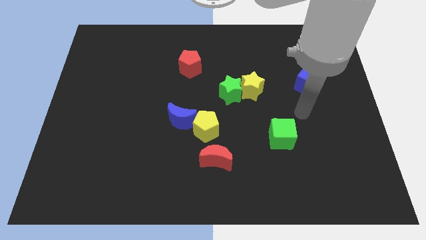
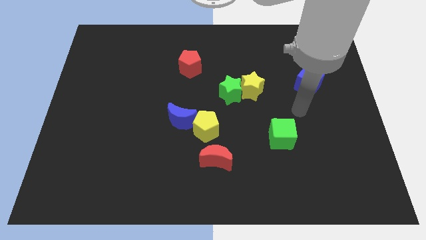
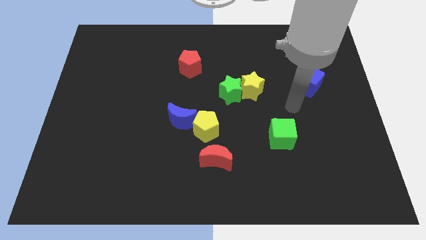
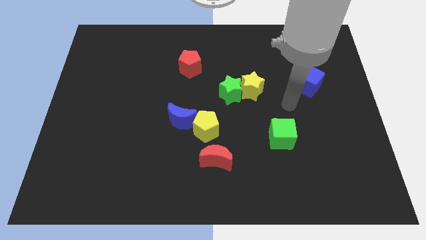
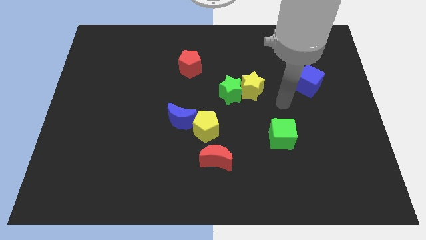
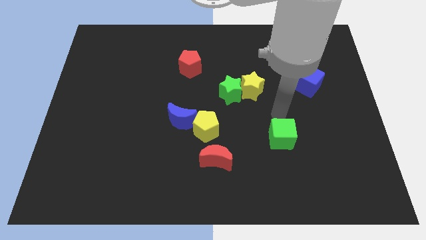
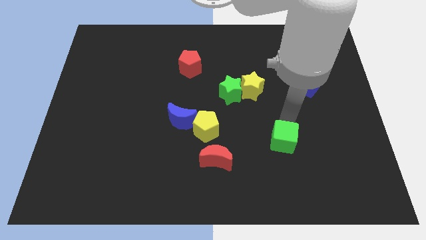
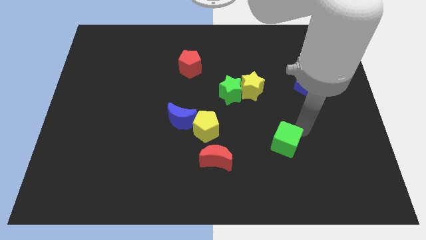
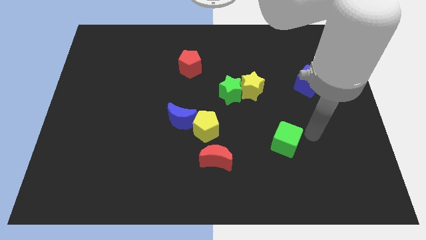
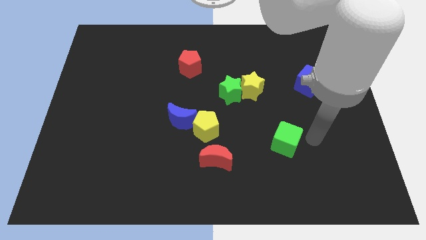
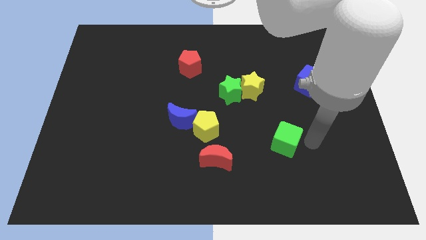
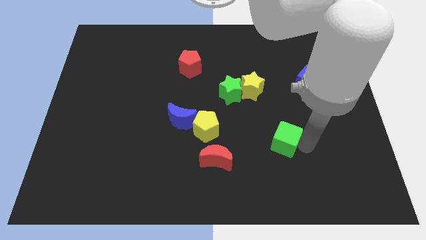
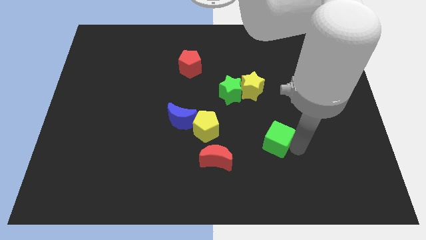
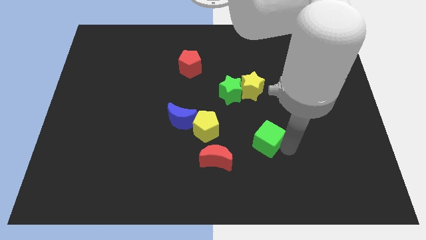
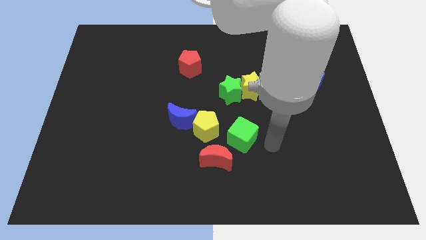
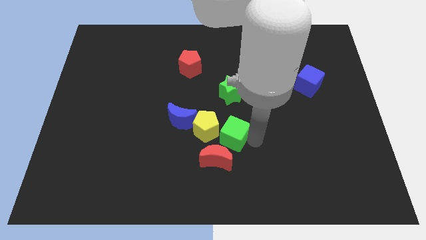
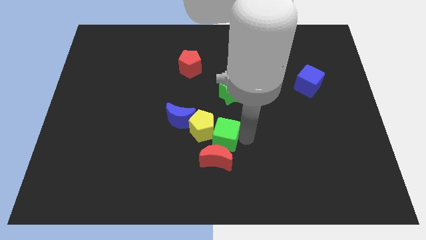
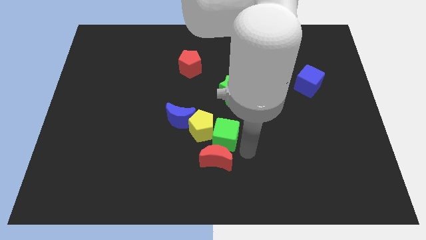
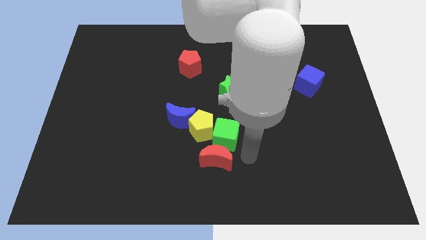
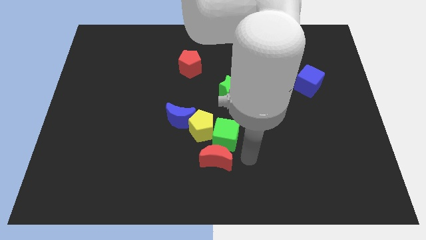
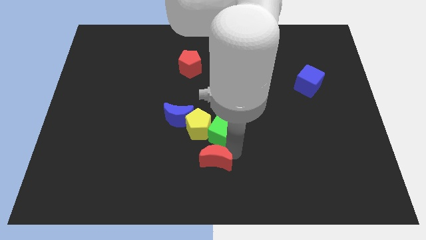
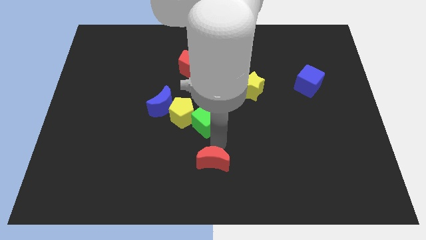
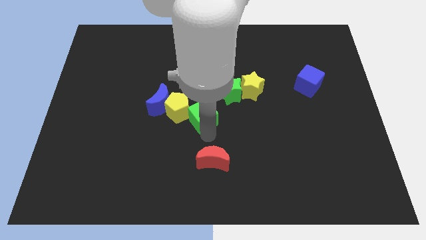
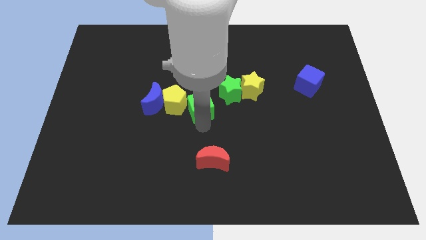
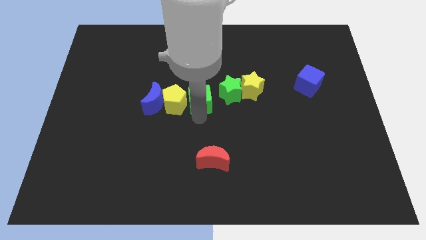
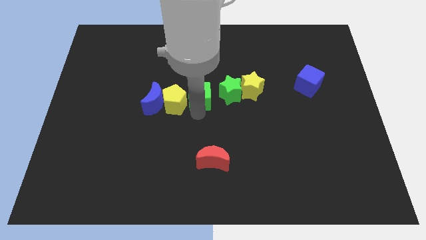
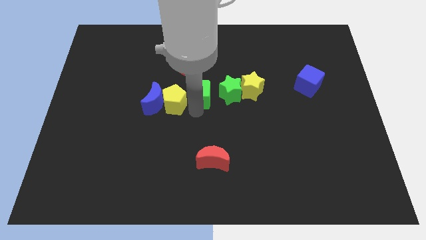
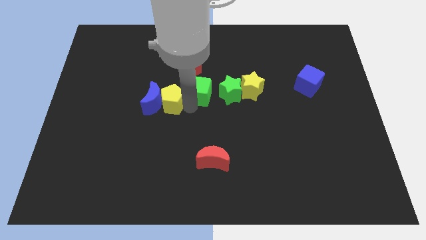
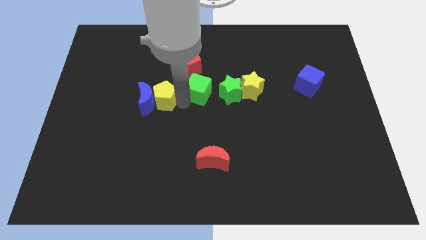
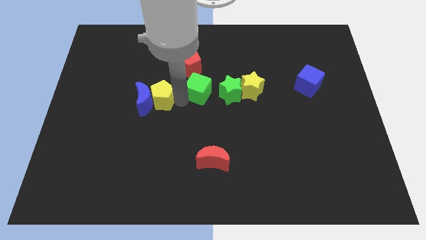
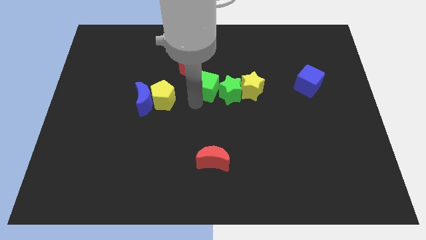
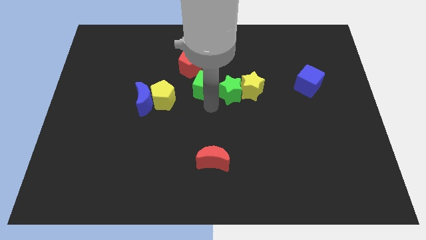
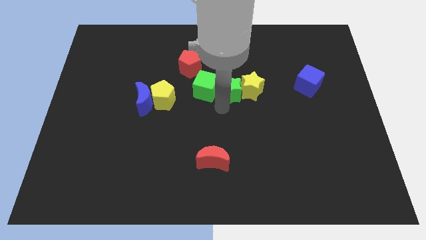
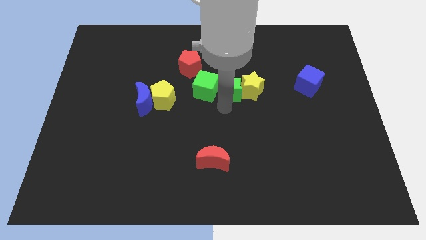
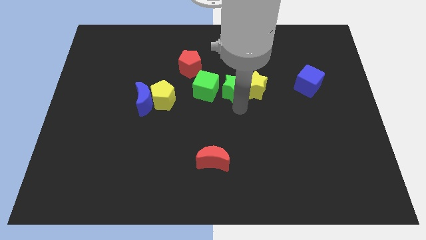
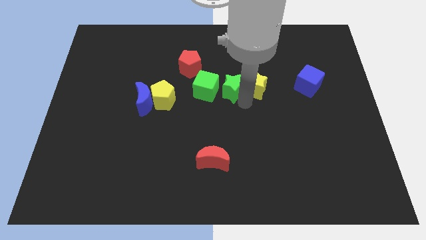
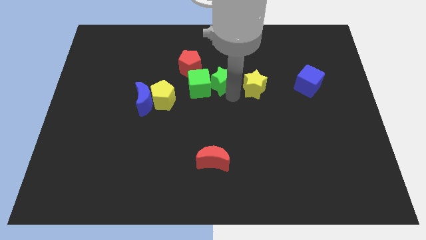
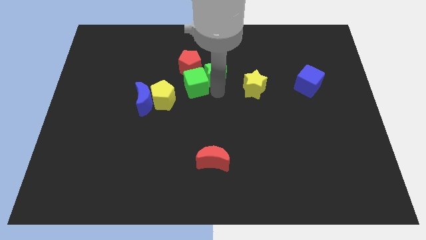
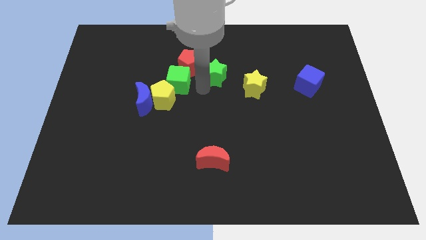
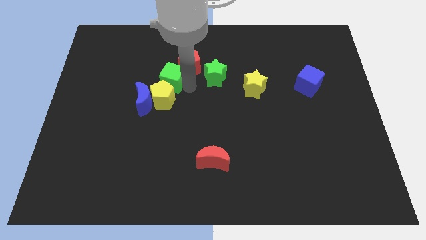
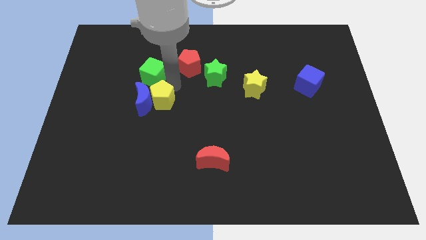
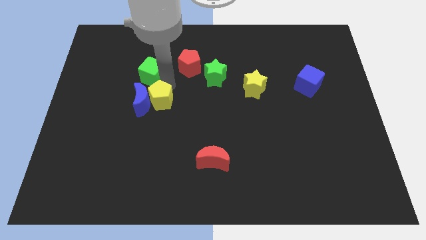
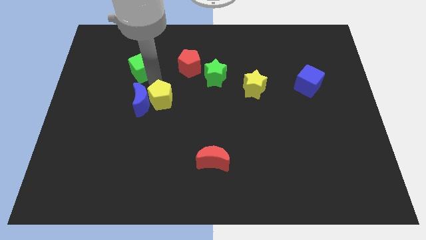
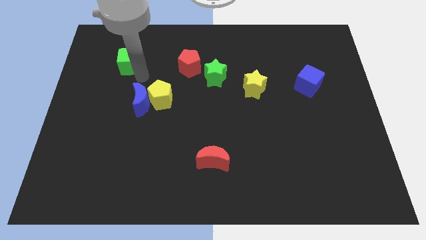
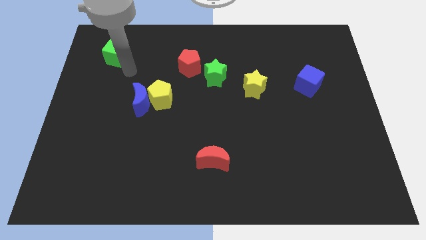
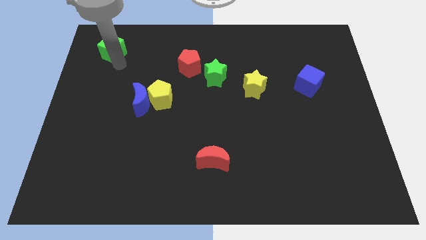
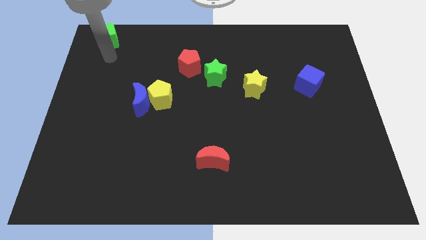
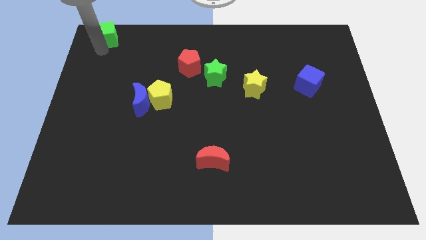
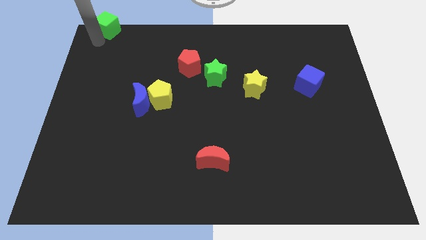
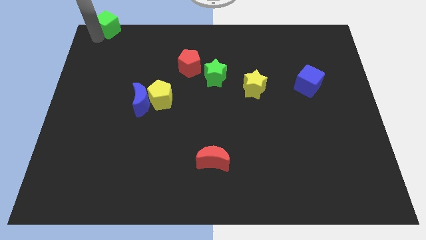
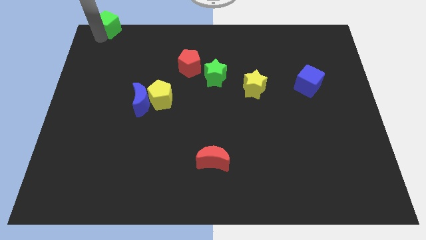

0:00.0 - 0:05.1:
place the green cube diagonally to the top left of the red pentagon

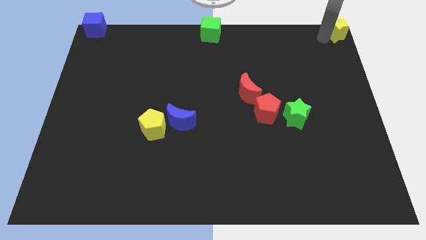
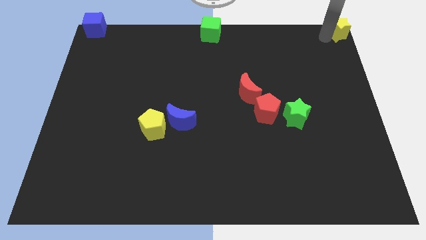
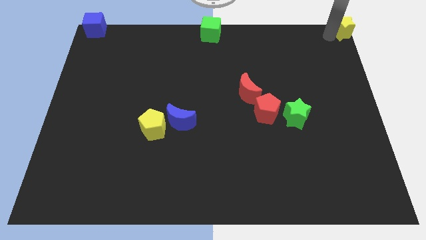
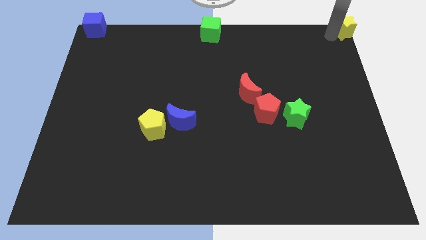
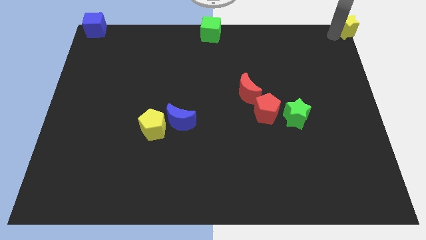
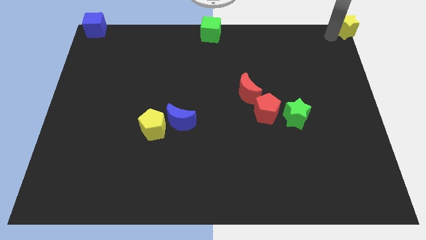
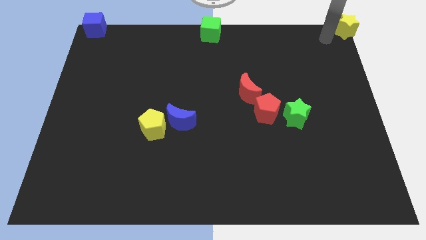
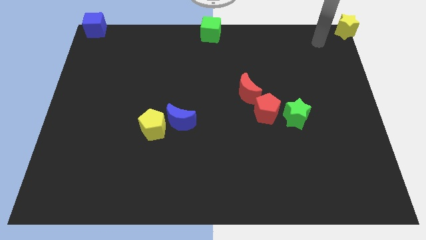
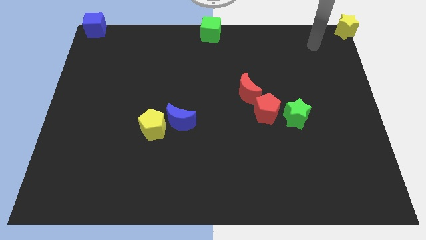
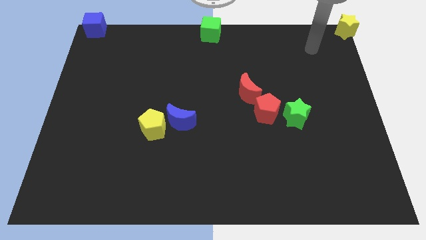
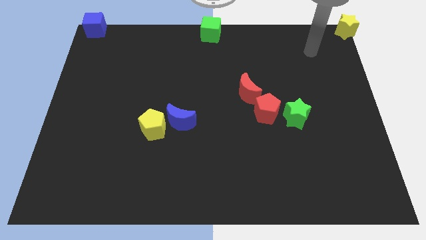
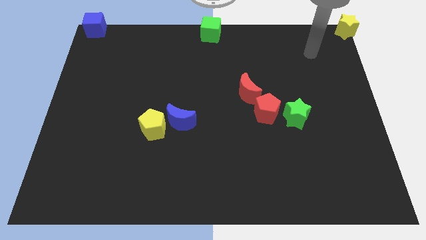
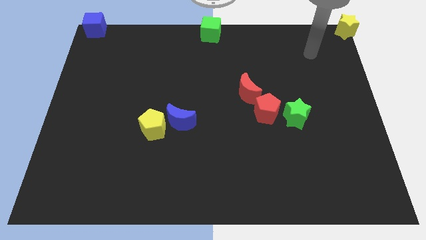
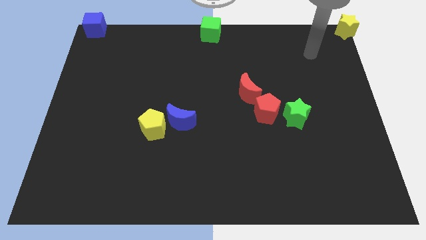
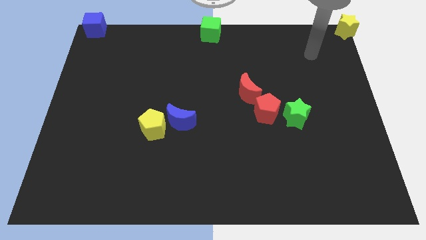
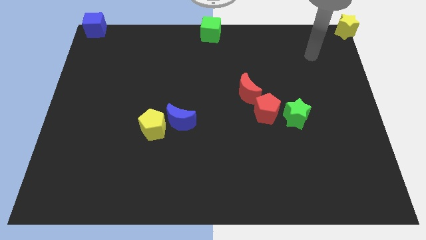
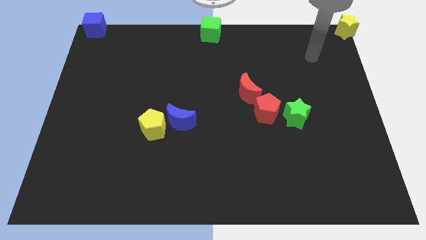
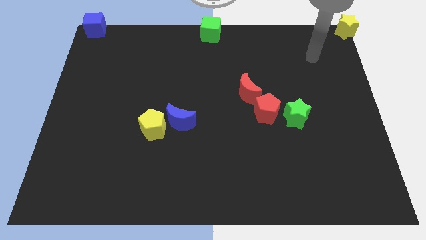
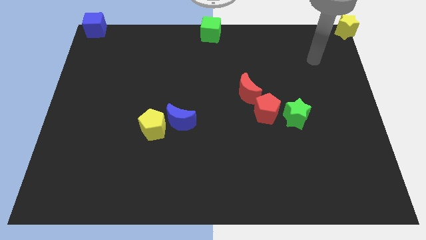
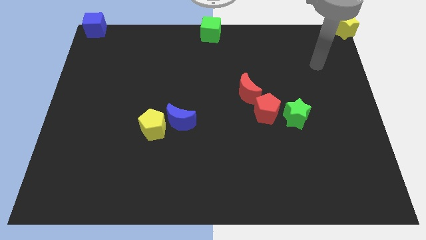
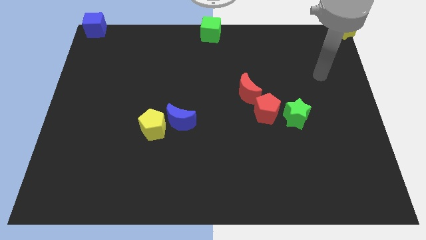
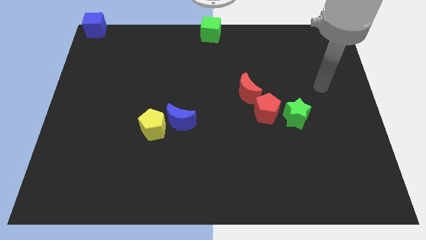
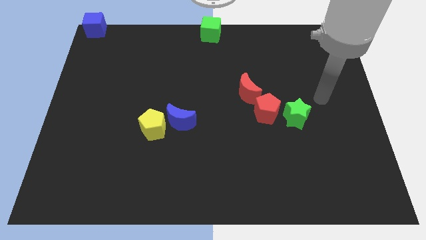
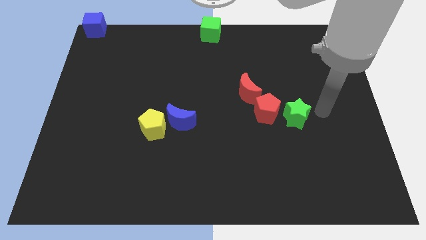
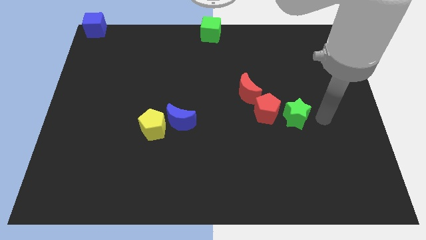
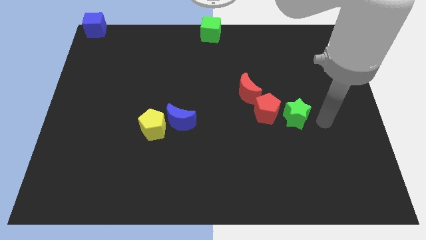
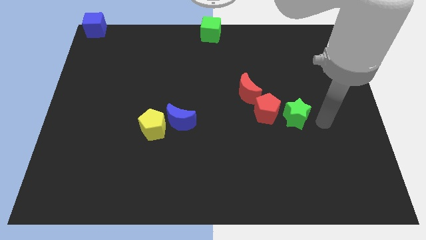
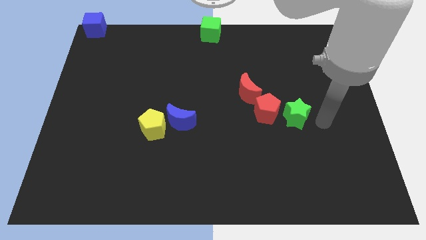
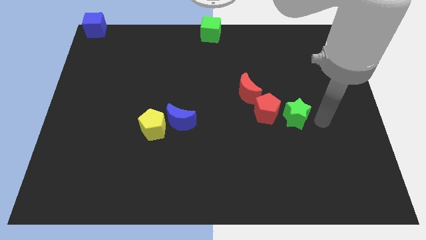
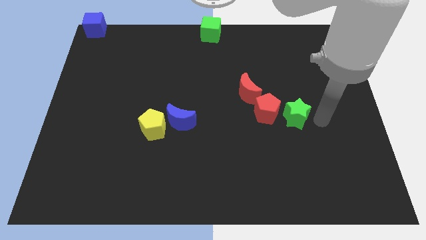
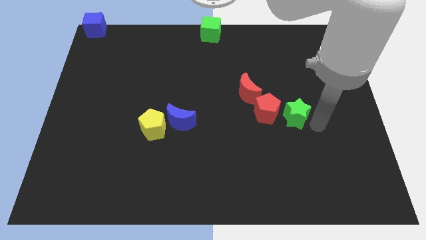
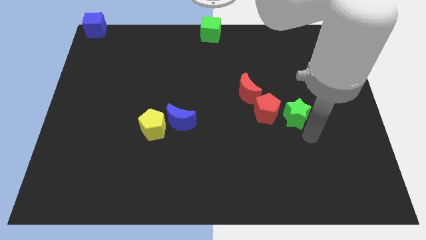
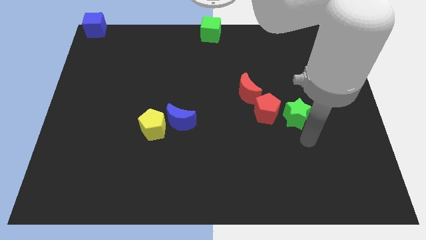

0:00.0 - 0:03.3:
move your arm away from the yellow star

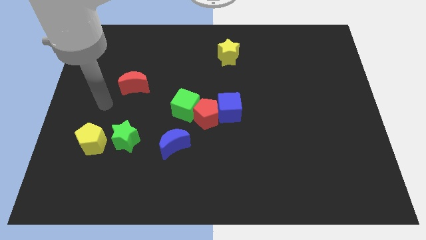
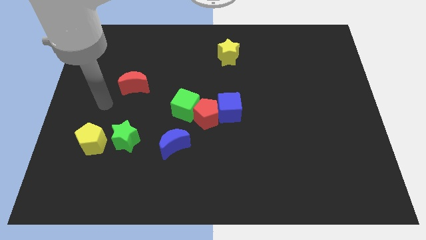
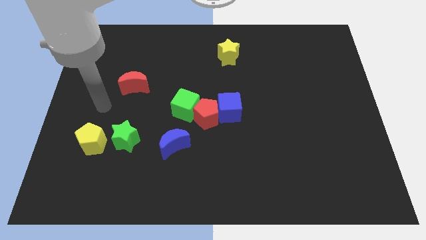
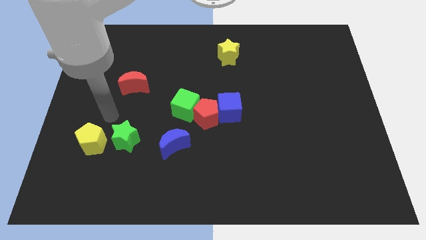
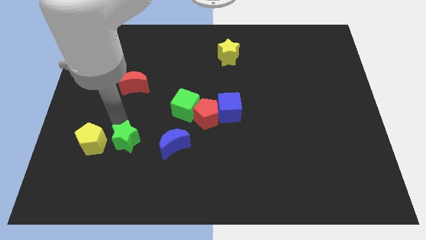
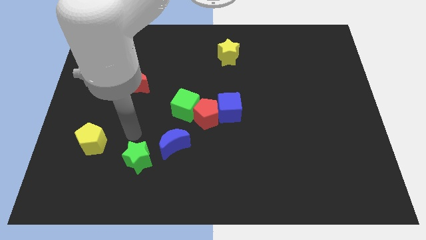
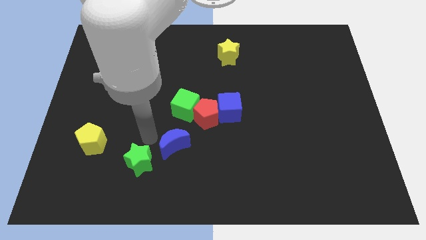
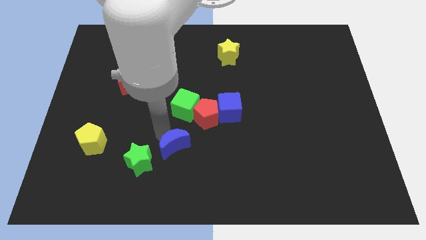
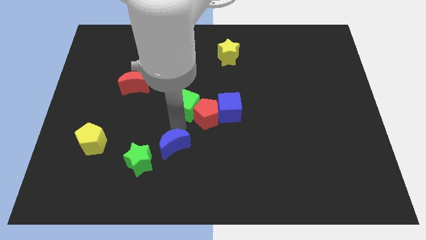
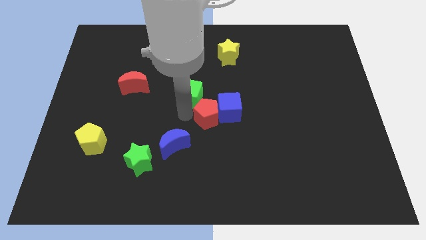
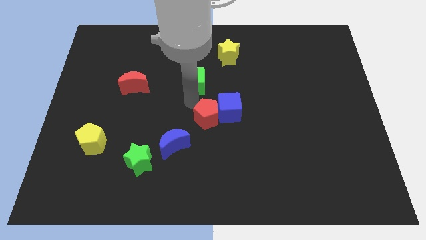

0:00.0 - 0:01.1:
push the green star slightly down
